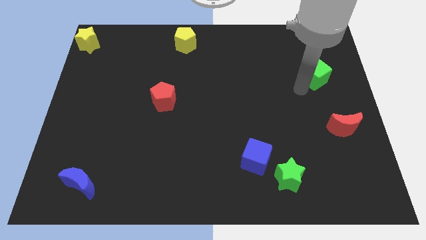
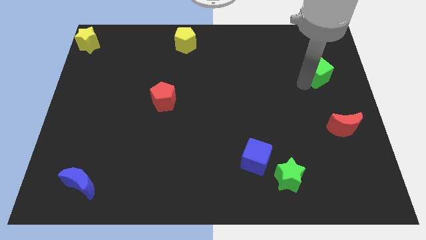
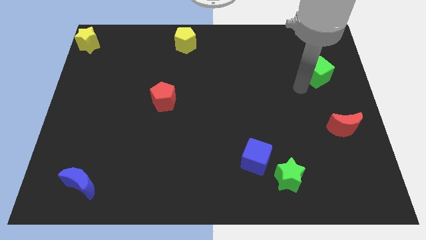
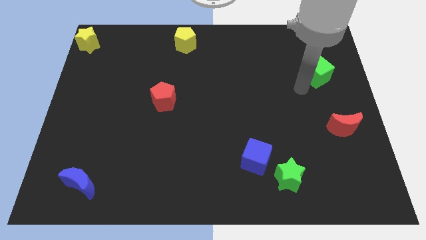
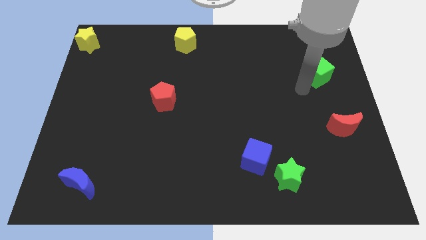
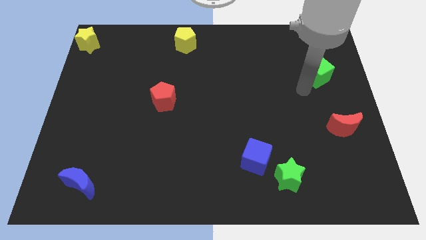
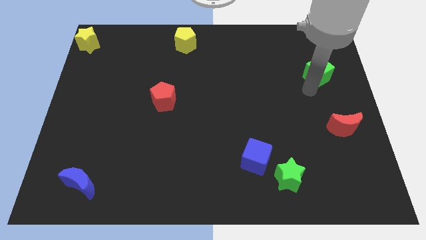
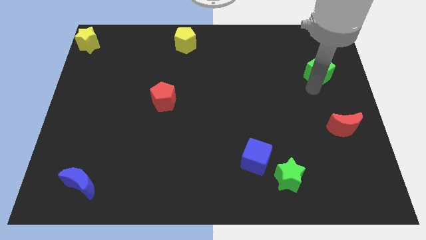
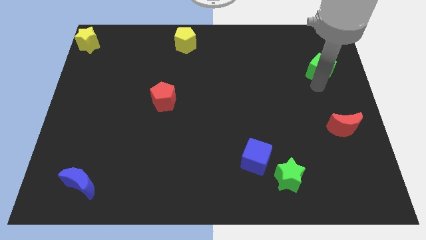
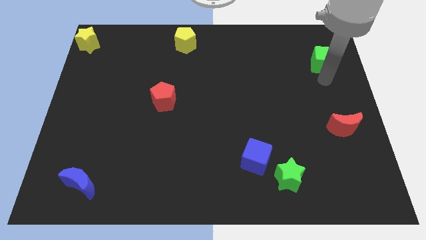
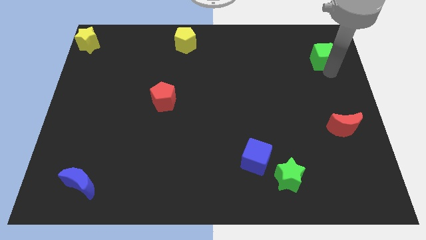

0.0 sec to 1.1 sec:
move green cube vertically above red moon

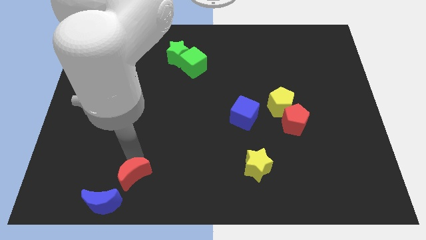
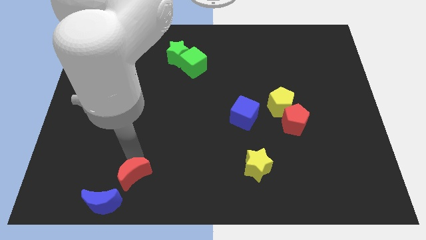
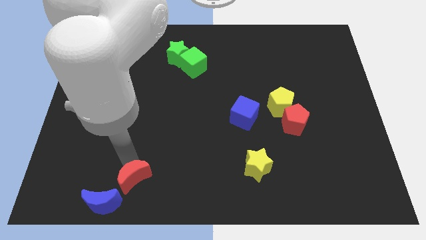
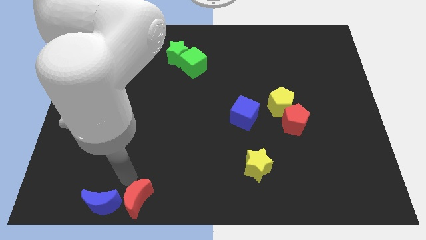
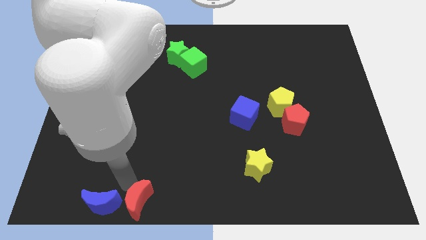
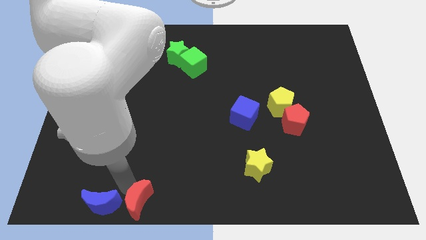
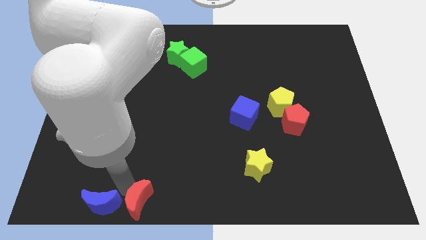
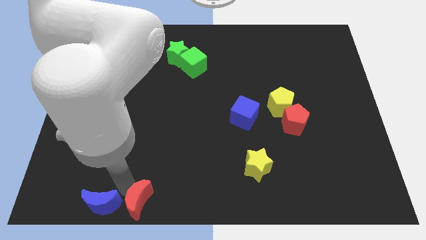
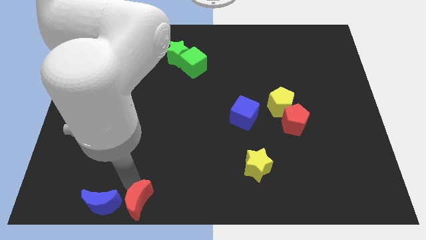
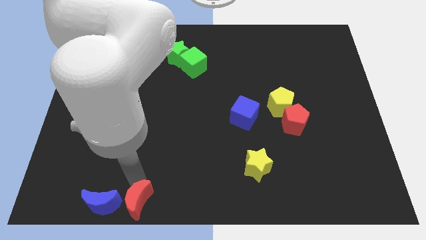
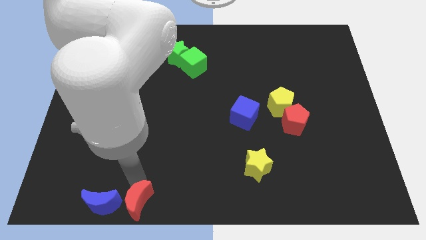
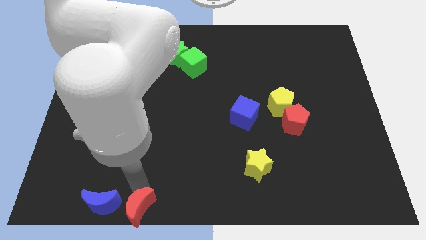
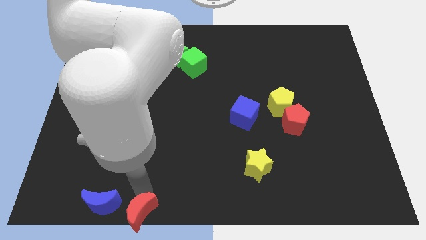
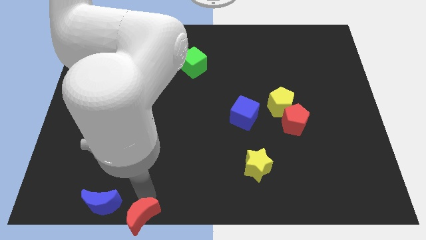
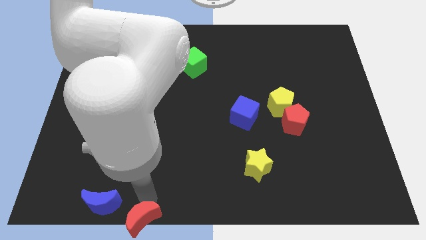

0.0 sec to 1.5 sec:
place red moon to the right side of the blue moon

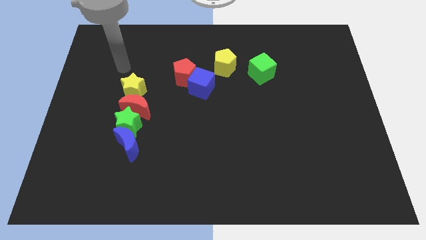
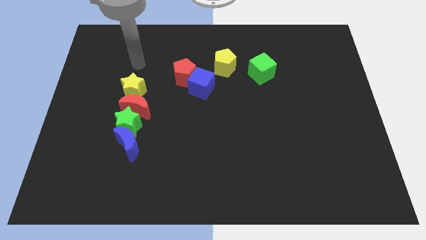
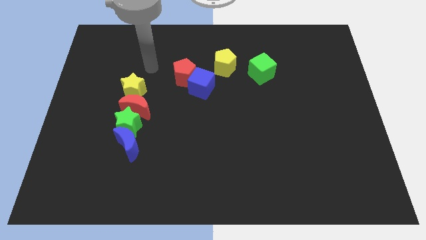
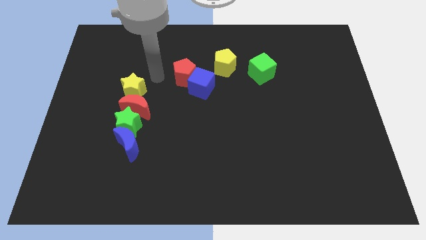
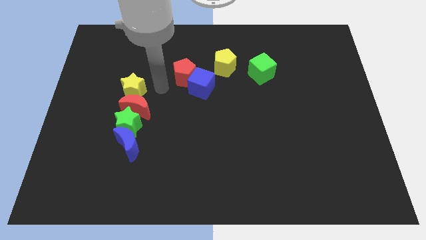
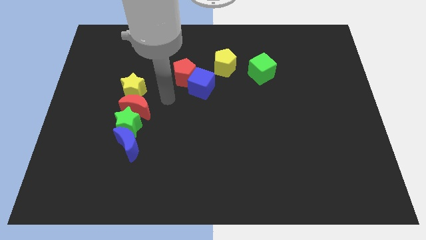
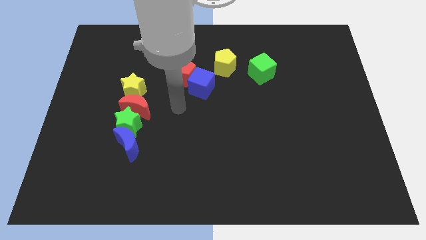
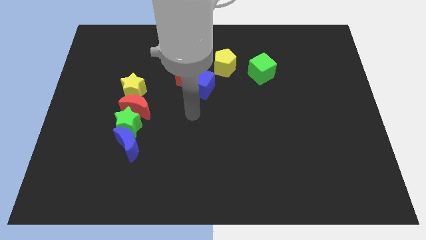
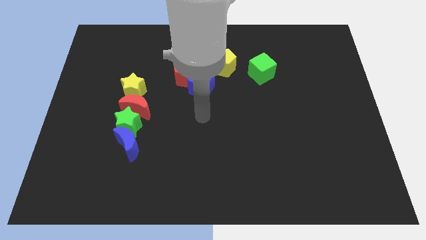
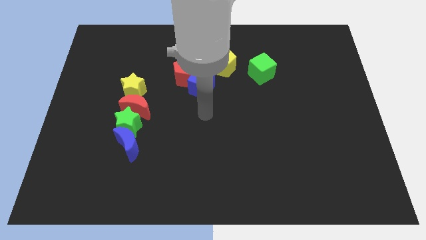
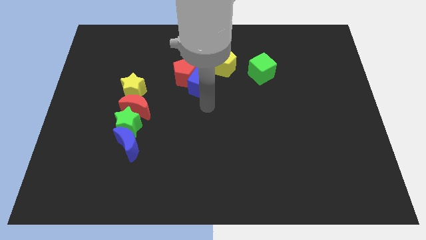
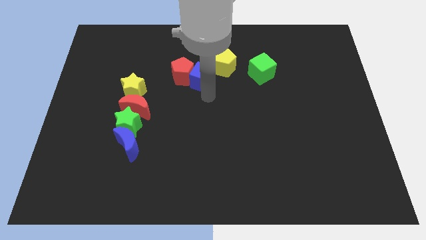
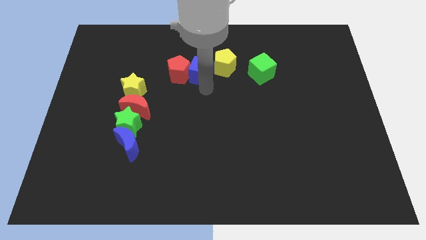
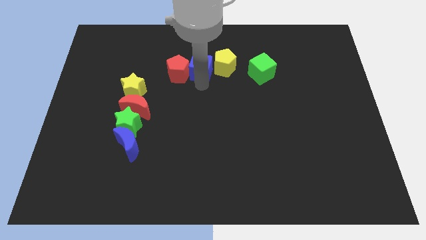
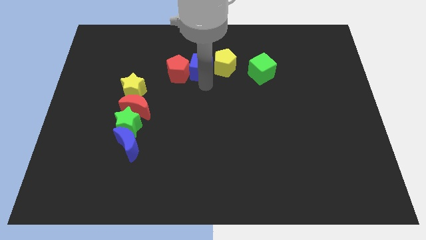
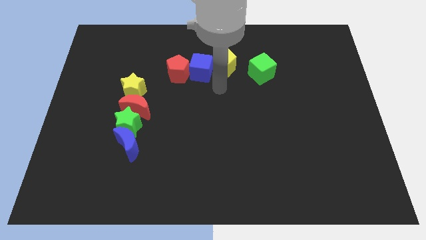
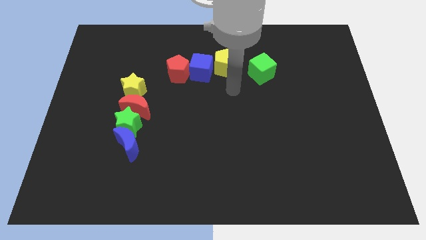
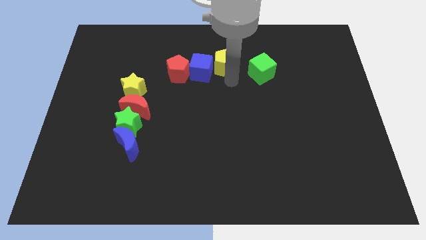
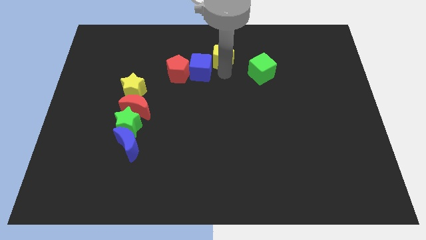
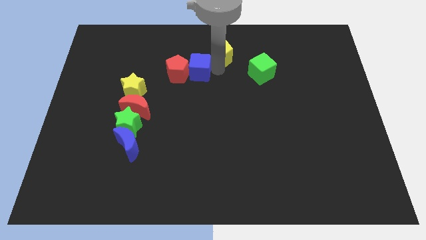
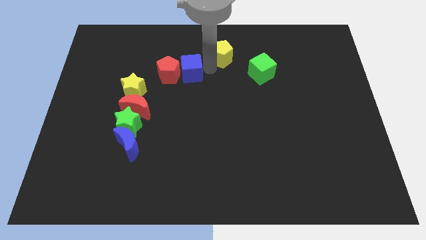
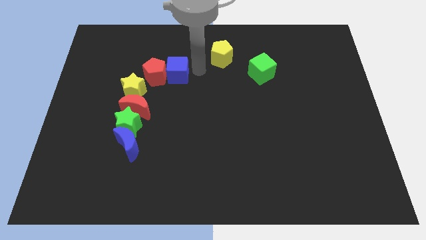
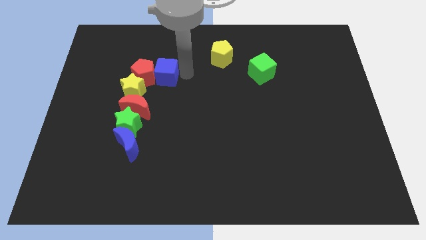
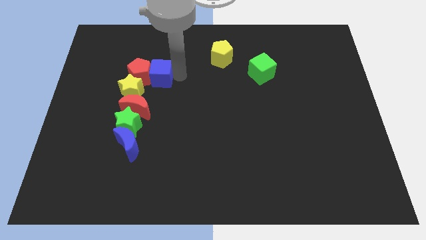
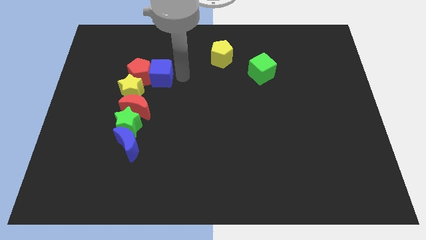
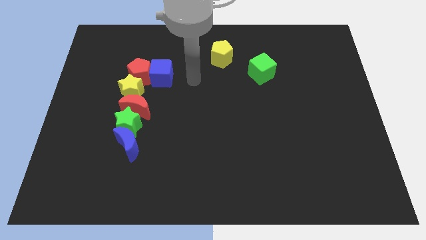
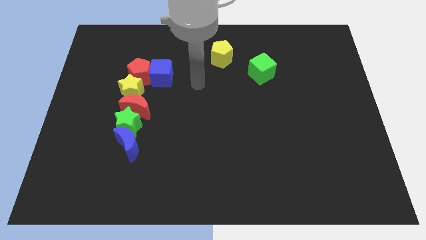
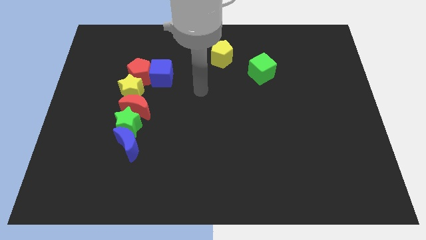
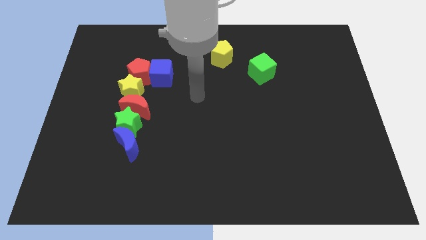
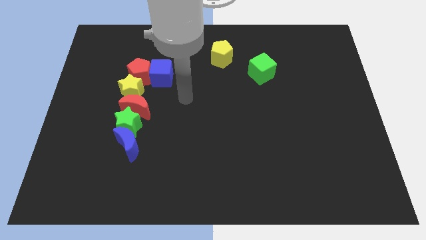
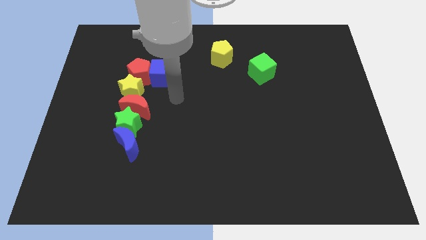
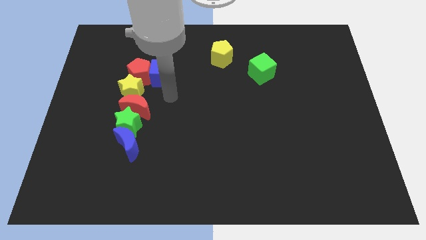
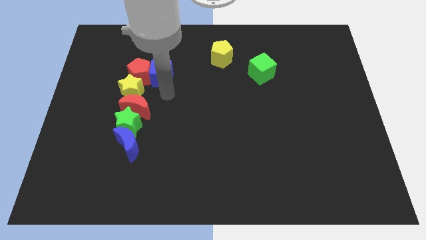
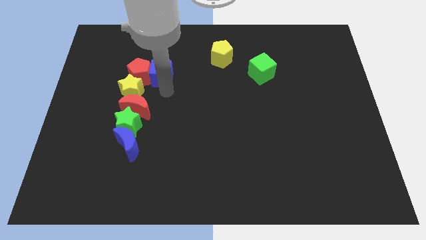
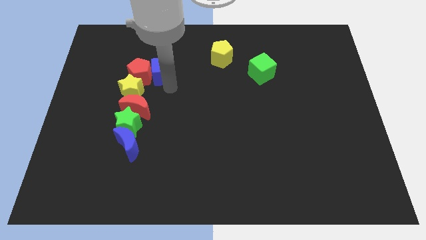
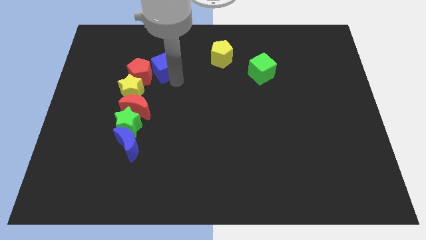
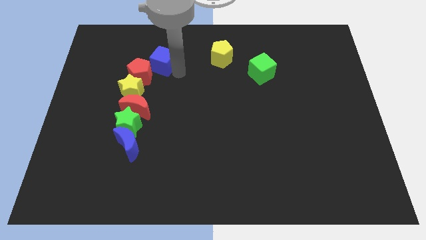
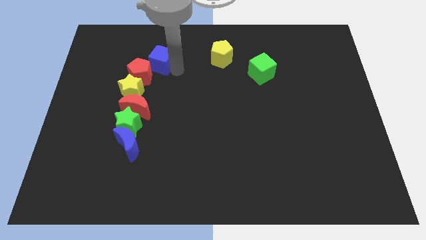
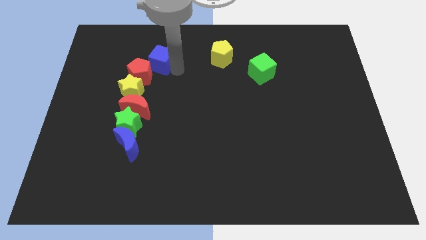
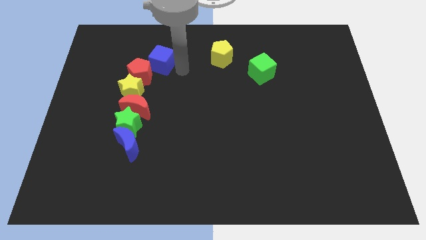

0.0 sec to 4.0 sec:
push the blue cube towards the red pentagon

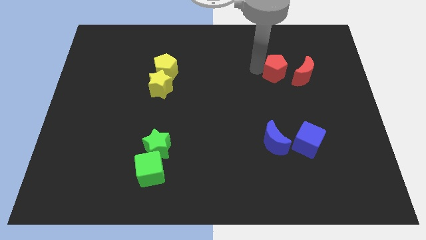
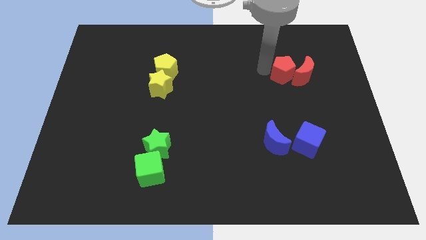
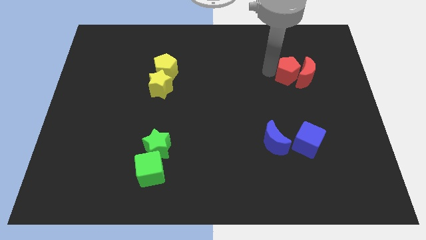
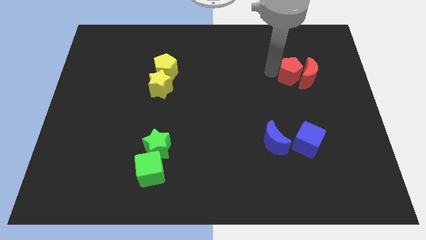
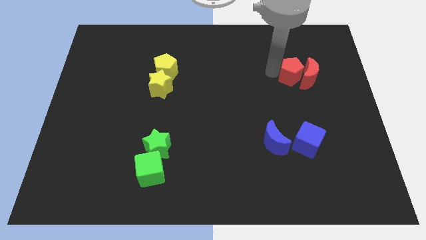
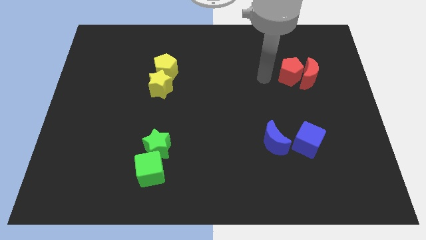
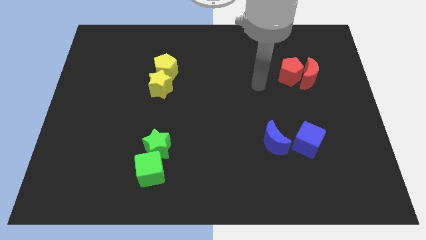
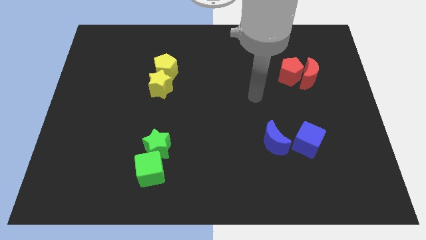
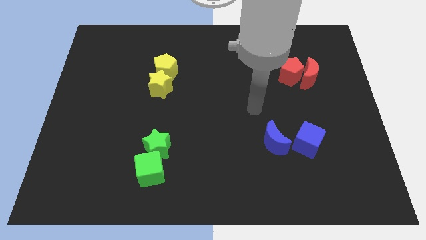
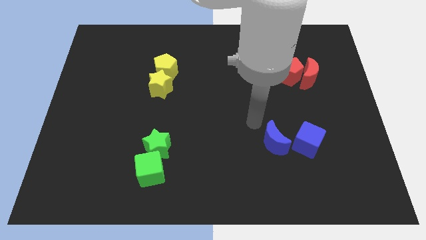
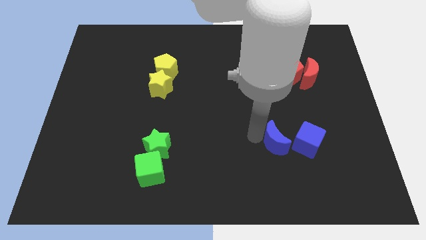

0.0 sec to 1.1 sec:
push red pentagon into the red moon

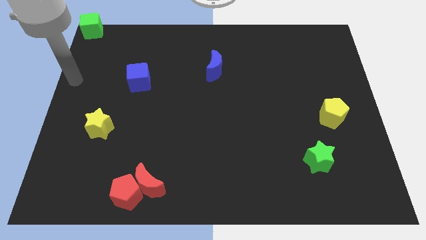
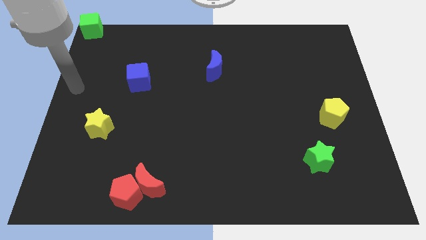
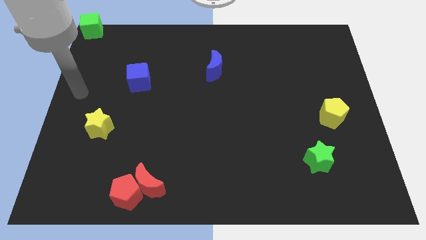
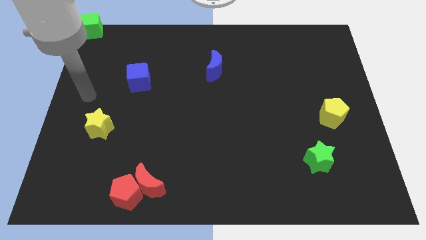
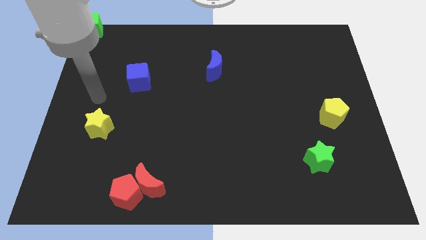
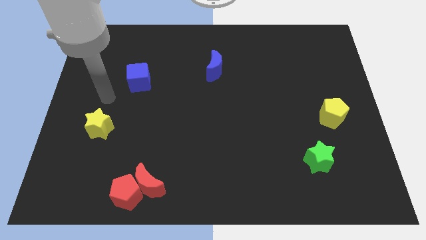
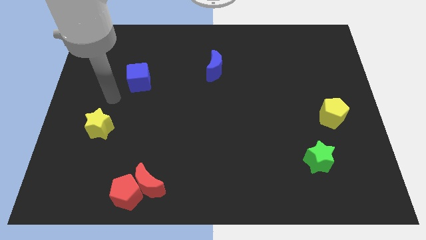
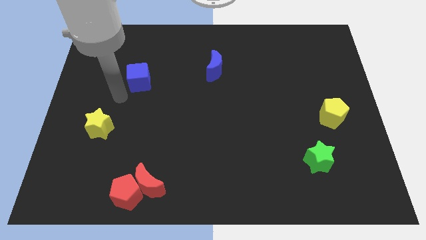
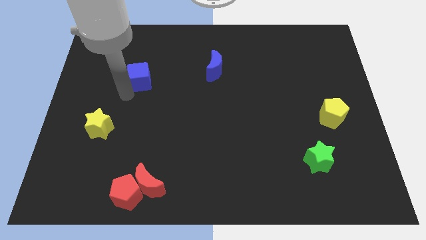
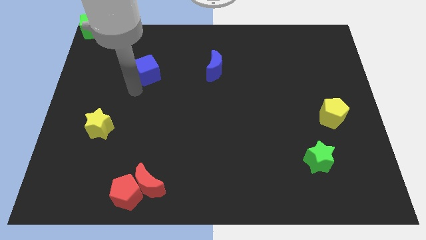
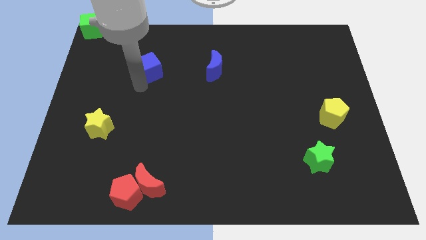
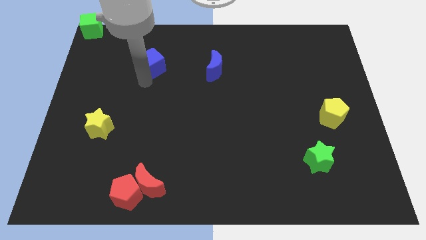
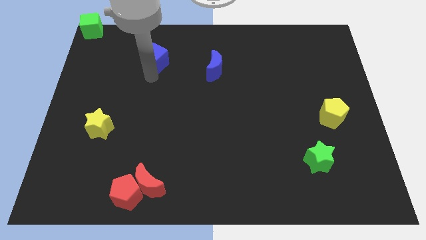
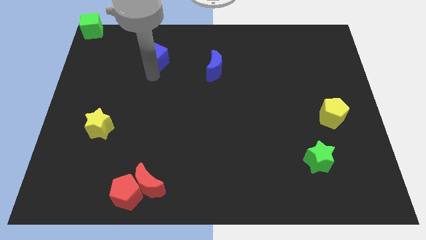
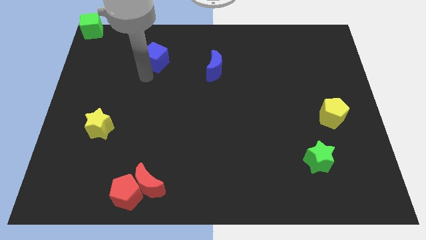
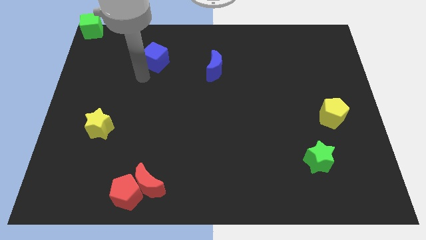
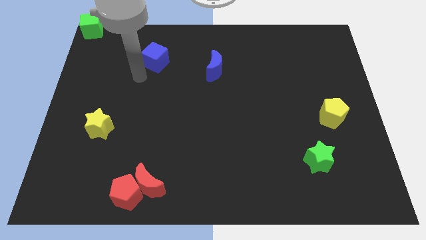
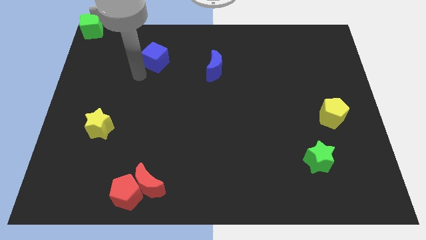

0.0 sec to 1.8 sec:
push the blue cube upwards
